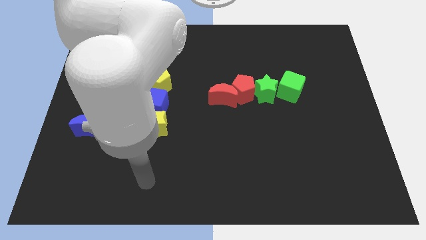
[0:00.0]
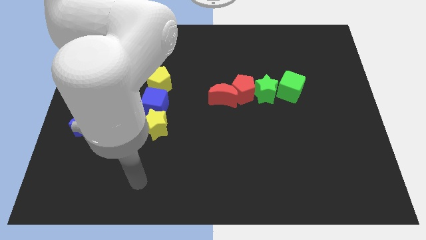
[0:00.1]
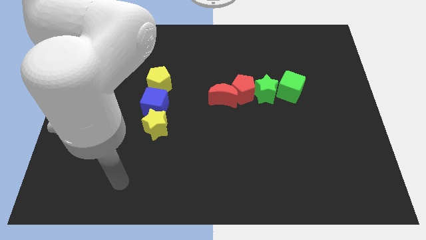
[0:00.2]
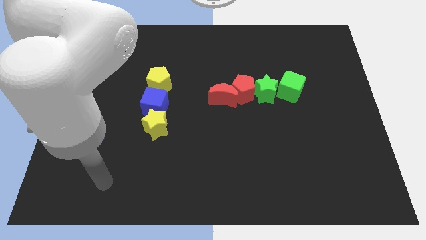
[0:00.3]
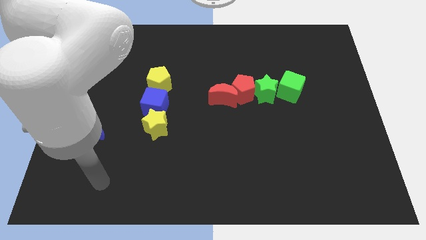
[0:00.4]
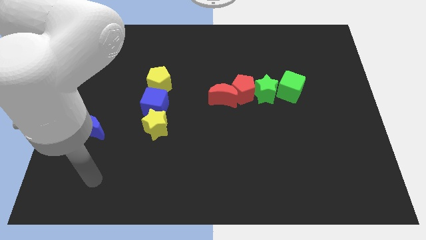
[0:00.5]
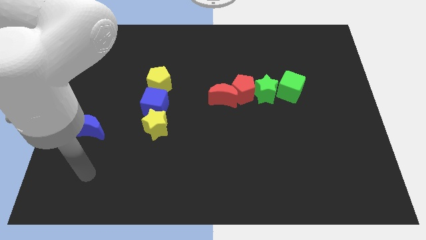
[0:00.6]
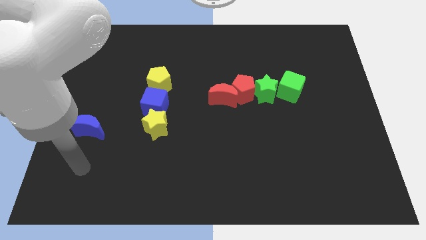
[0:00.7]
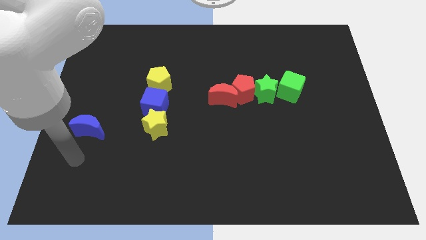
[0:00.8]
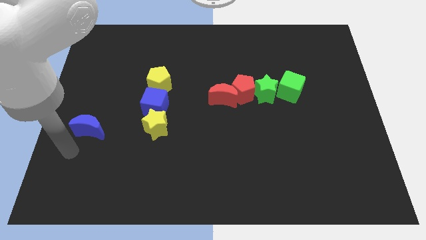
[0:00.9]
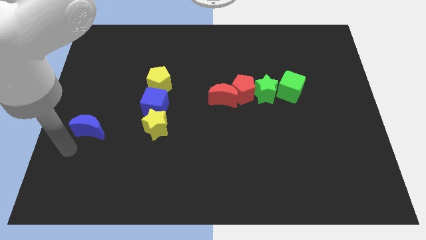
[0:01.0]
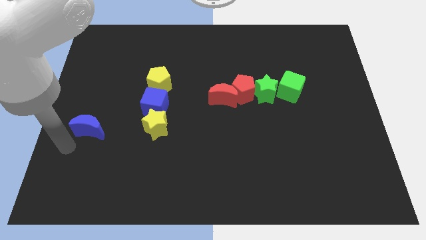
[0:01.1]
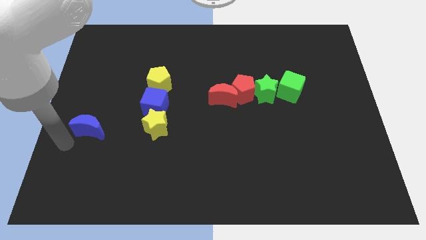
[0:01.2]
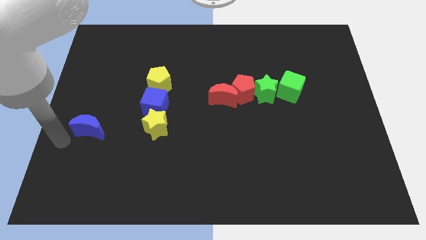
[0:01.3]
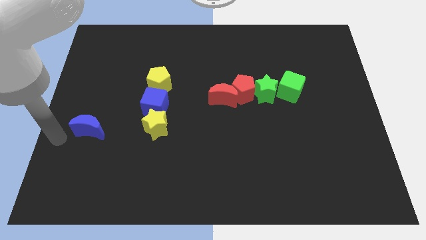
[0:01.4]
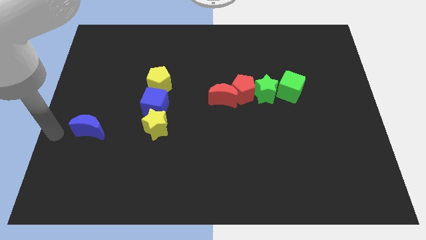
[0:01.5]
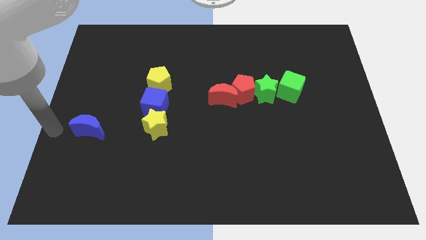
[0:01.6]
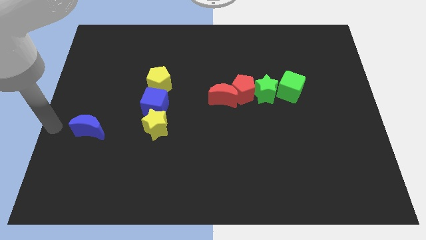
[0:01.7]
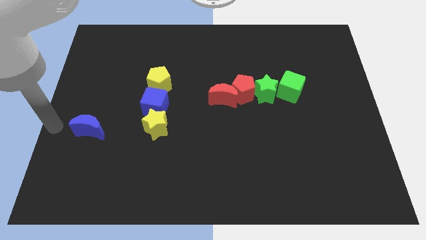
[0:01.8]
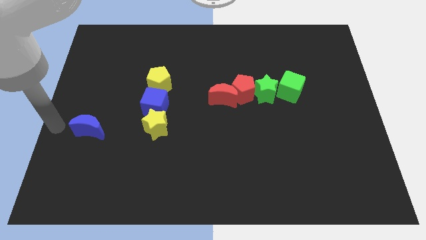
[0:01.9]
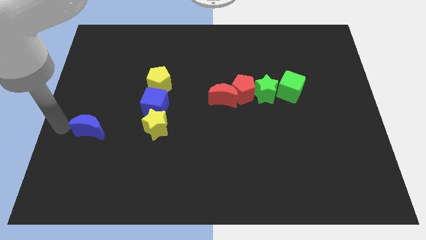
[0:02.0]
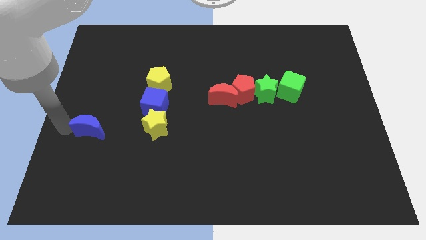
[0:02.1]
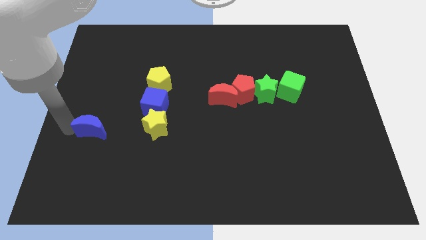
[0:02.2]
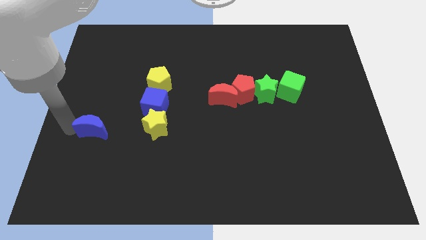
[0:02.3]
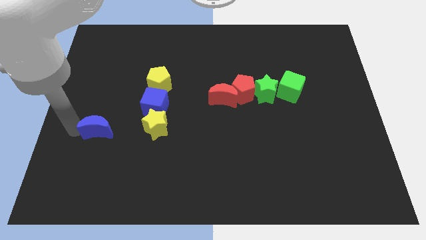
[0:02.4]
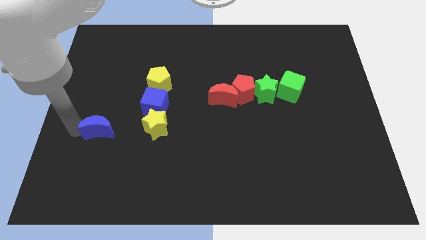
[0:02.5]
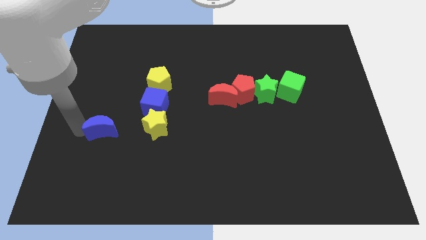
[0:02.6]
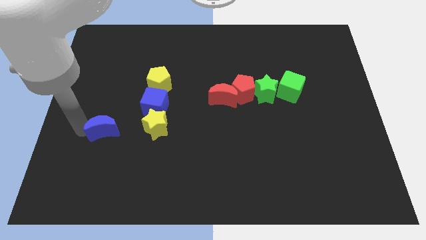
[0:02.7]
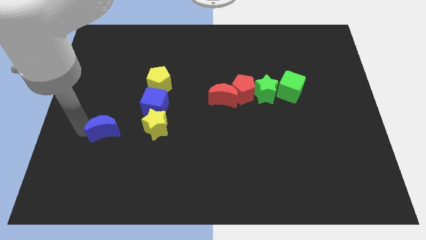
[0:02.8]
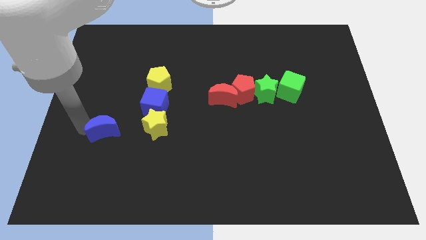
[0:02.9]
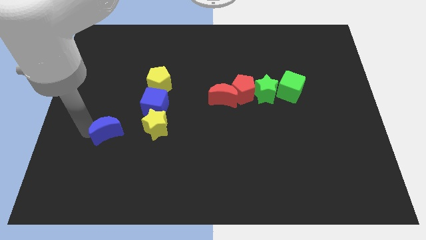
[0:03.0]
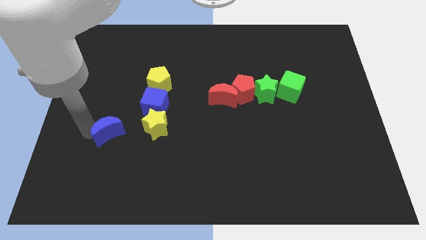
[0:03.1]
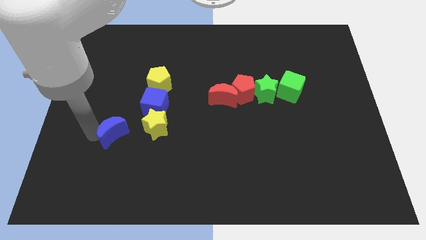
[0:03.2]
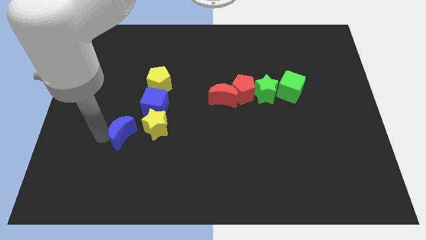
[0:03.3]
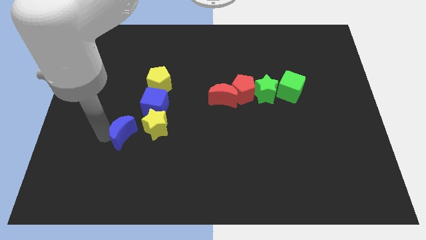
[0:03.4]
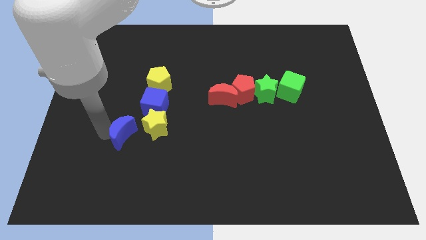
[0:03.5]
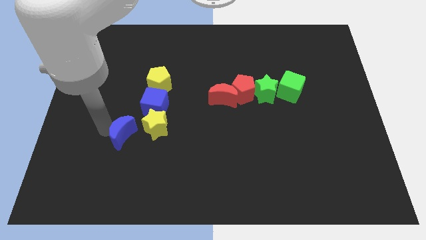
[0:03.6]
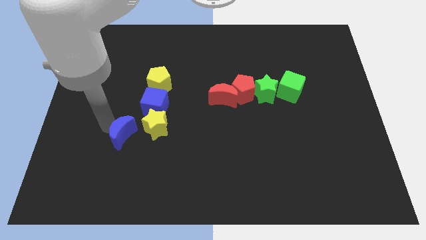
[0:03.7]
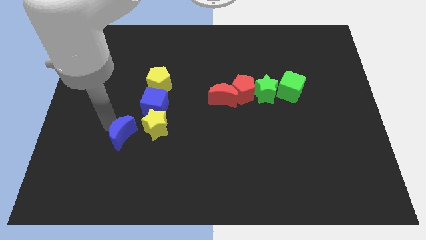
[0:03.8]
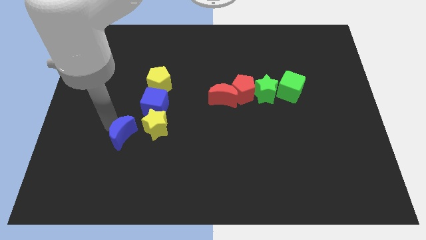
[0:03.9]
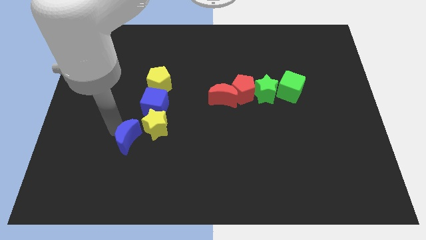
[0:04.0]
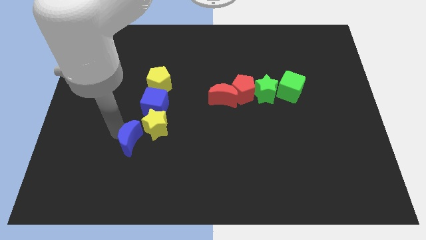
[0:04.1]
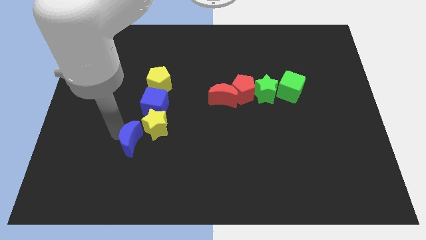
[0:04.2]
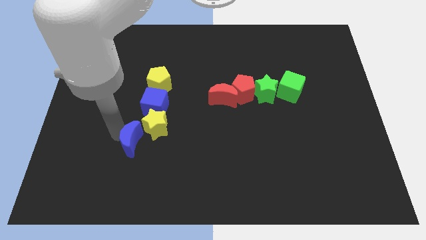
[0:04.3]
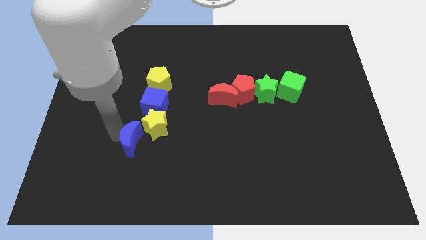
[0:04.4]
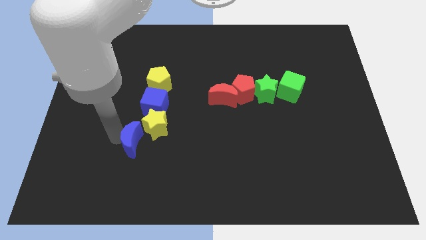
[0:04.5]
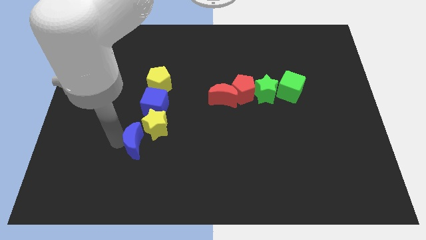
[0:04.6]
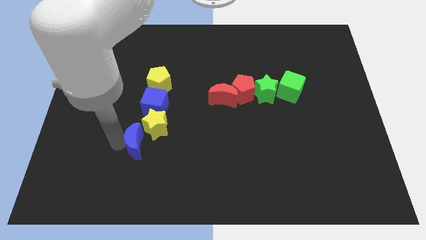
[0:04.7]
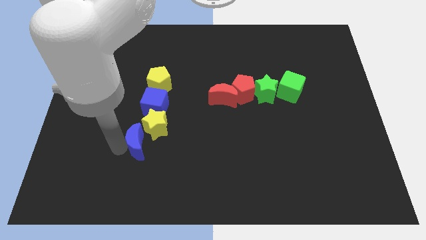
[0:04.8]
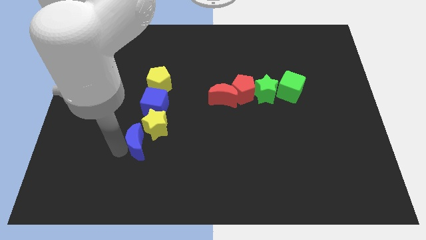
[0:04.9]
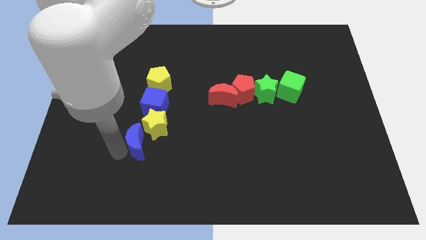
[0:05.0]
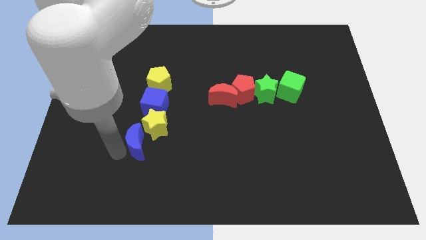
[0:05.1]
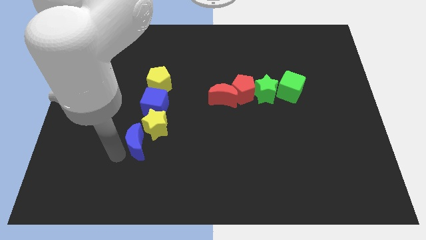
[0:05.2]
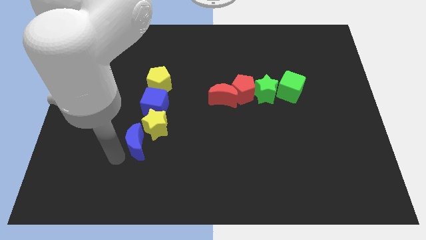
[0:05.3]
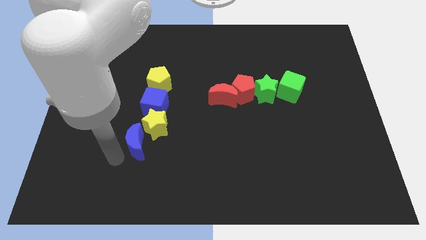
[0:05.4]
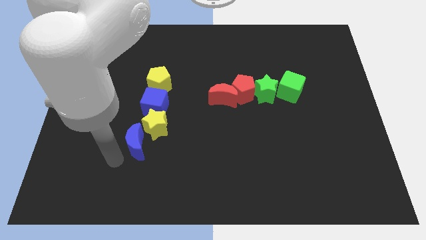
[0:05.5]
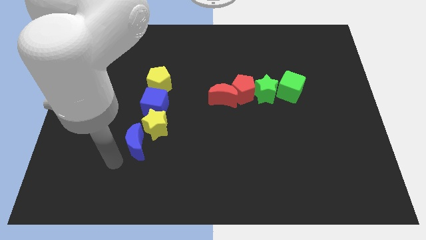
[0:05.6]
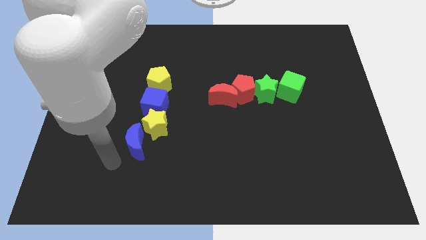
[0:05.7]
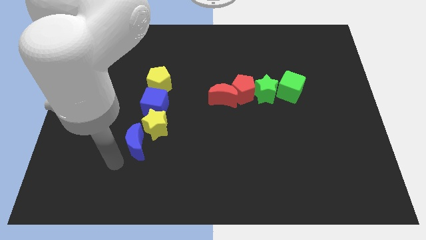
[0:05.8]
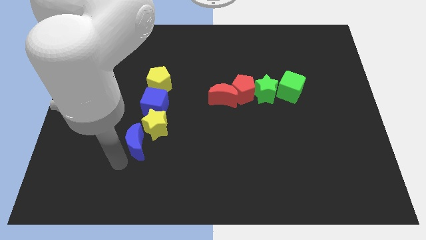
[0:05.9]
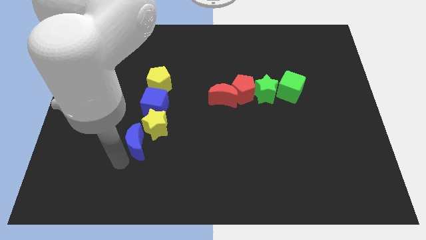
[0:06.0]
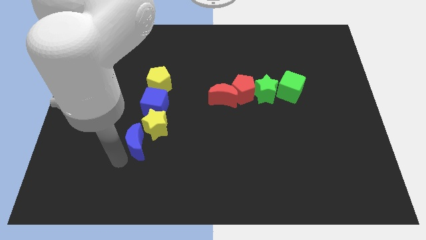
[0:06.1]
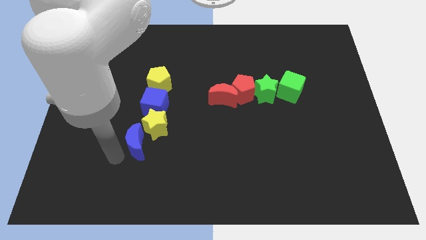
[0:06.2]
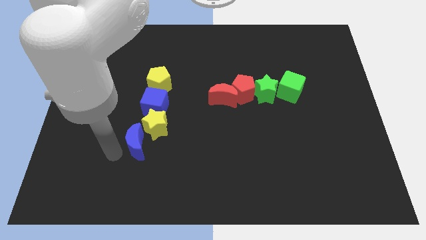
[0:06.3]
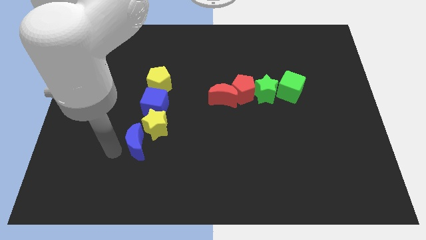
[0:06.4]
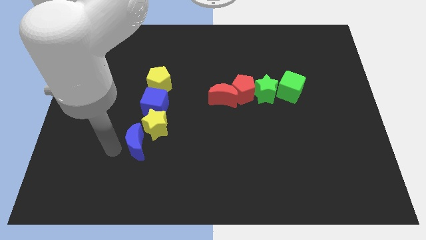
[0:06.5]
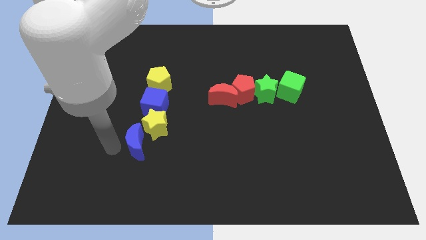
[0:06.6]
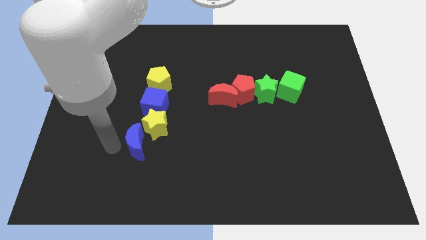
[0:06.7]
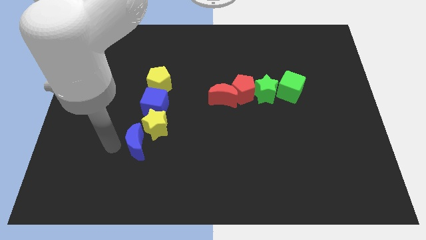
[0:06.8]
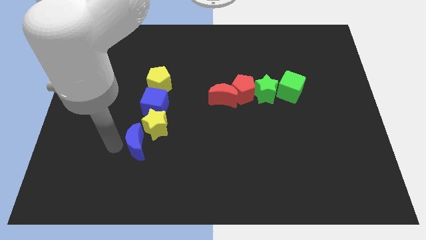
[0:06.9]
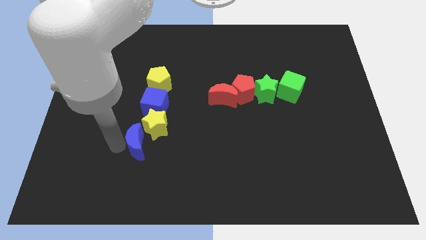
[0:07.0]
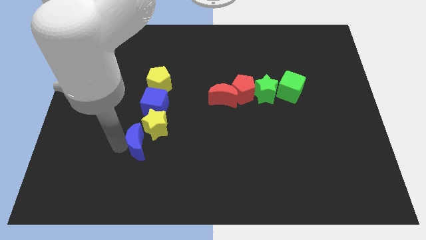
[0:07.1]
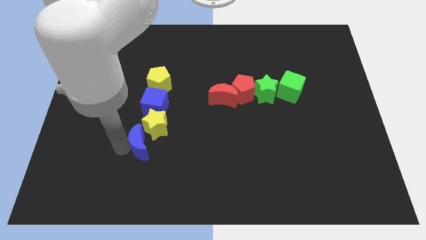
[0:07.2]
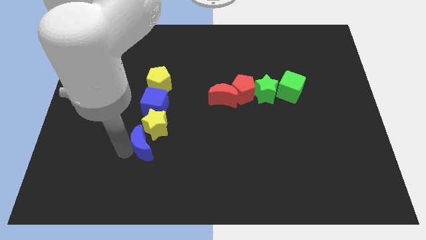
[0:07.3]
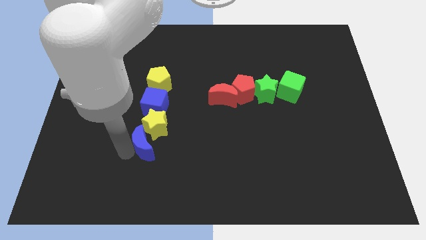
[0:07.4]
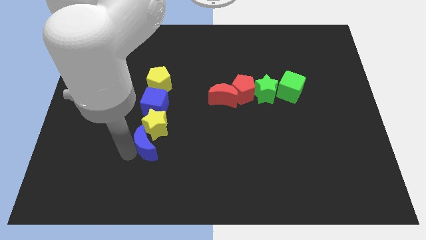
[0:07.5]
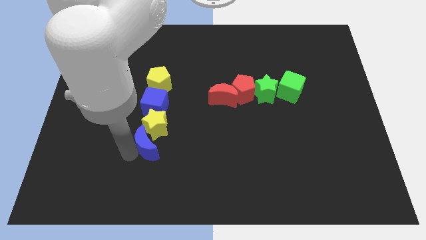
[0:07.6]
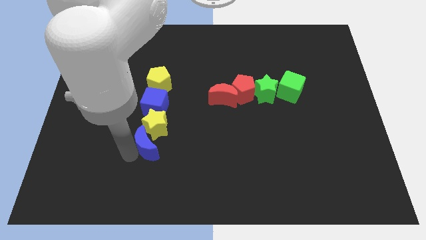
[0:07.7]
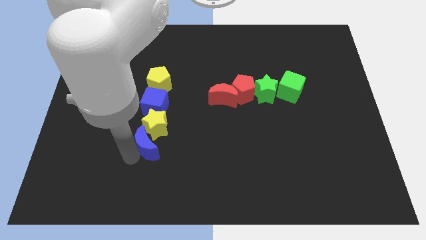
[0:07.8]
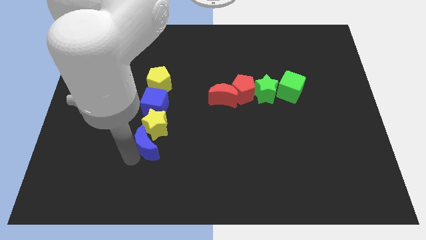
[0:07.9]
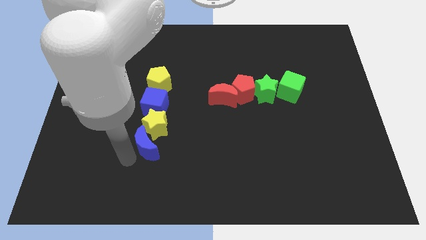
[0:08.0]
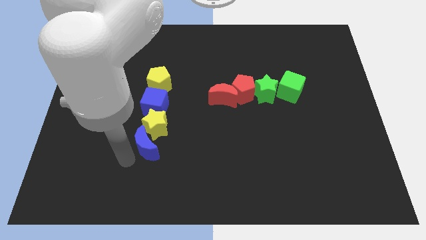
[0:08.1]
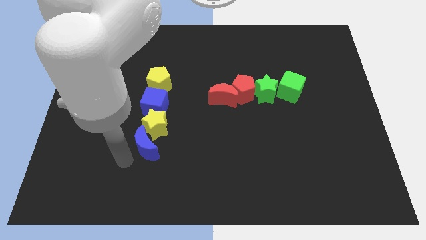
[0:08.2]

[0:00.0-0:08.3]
move the blue moon diagonally below the yellow star

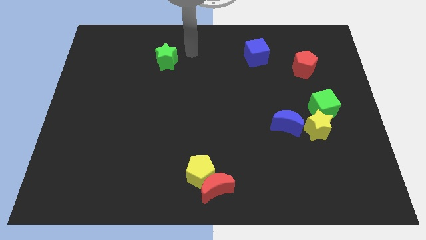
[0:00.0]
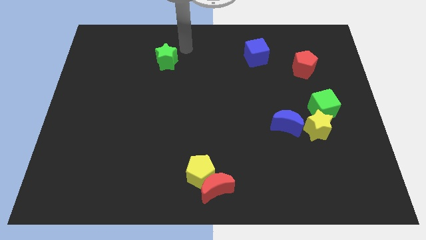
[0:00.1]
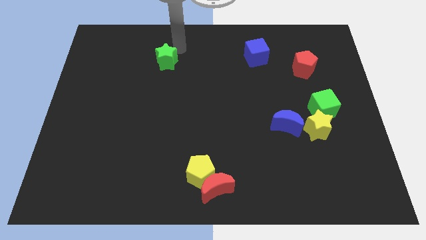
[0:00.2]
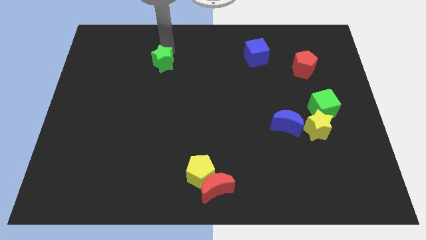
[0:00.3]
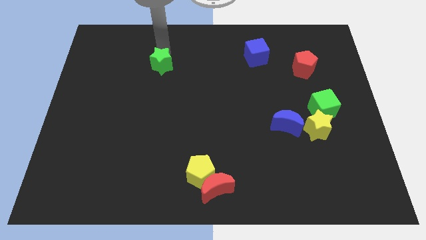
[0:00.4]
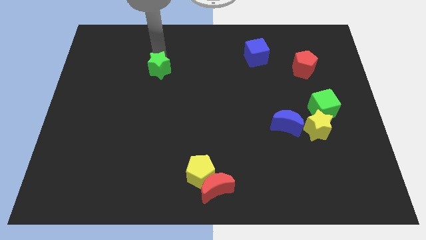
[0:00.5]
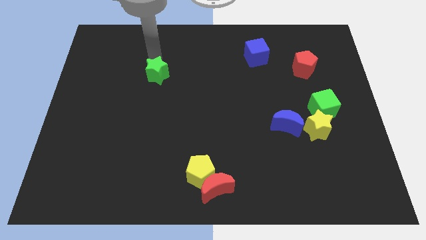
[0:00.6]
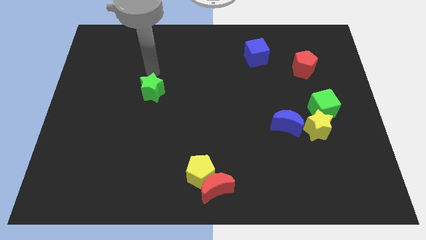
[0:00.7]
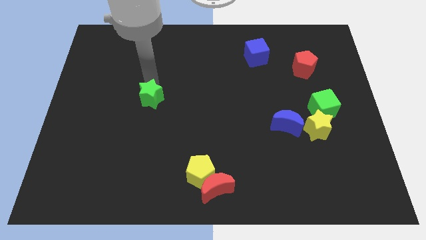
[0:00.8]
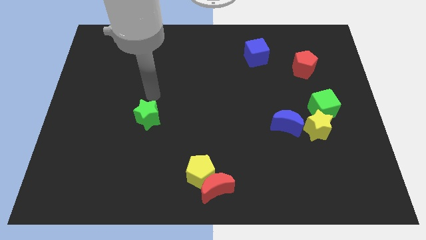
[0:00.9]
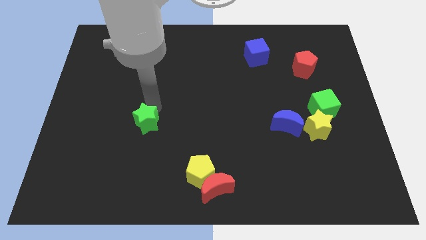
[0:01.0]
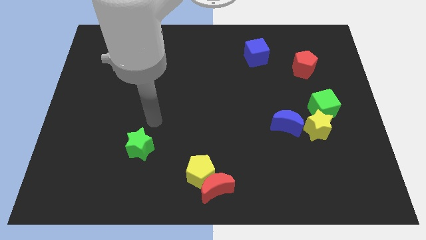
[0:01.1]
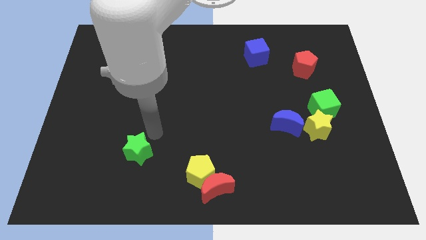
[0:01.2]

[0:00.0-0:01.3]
push the green star to the bottom
